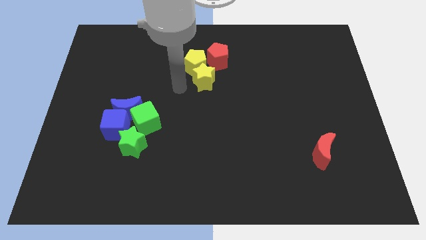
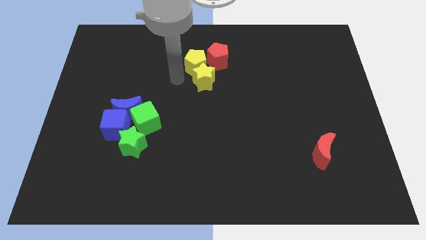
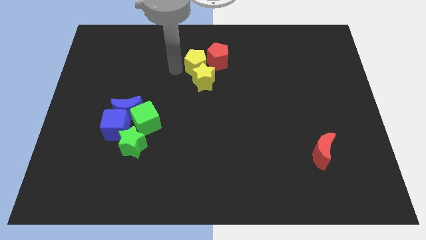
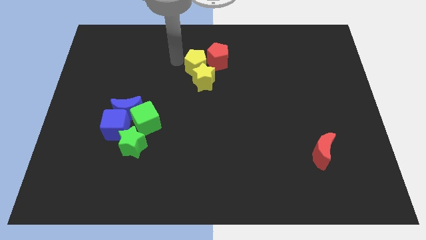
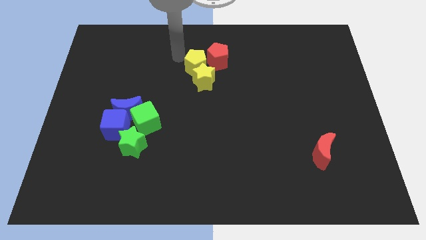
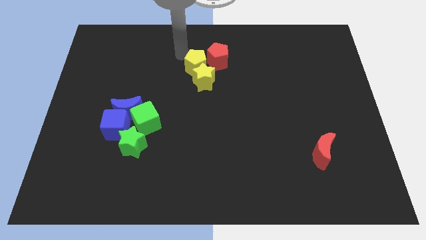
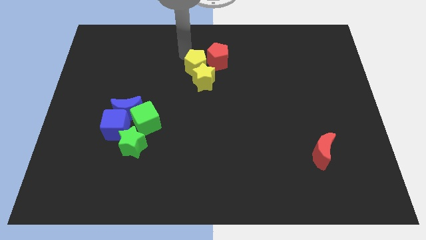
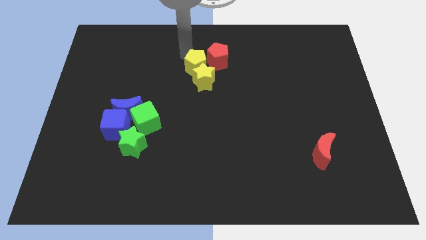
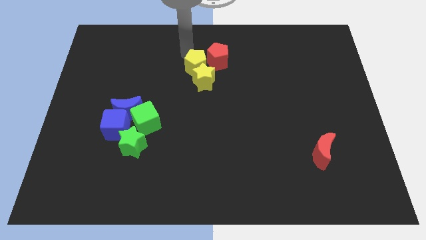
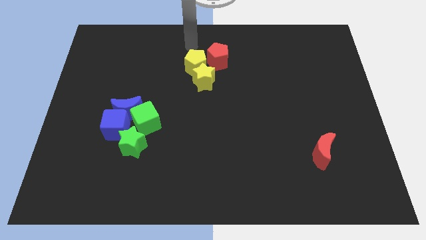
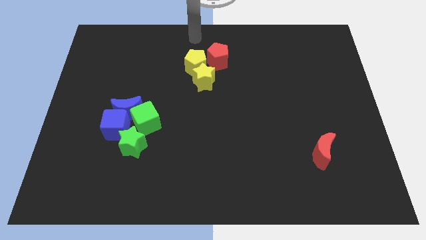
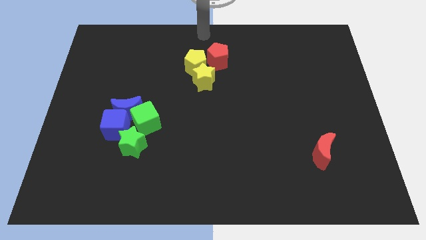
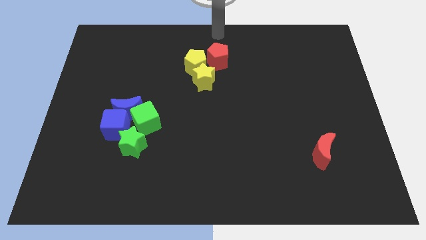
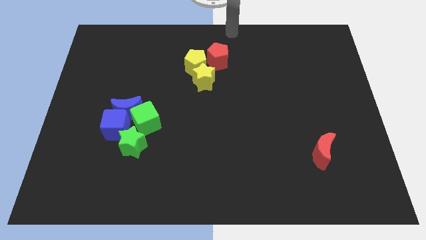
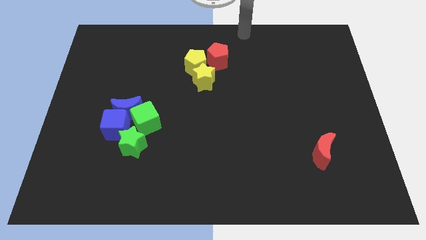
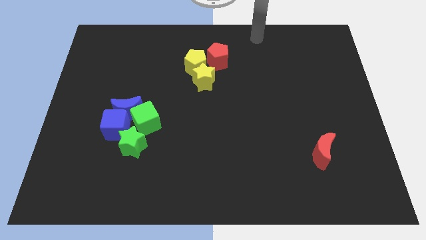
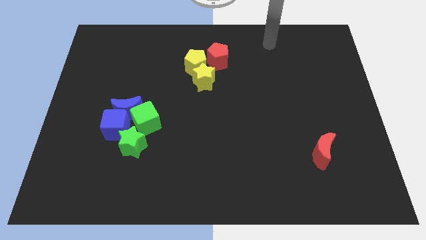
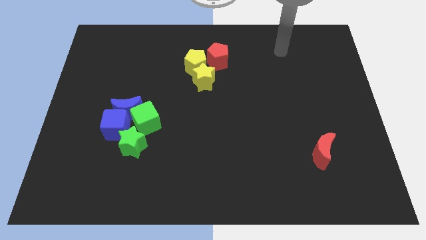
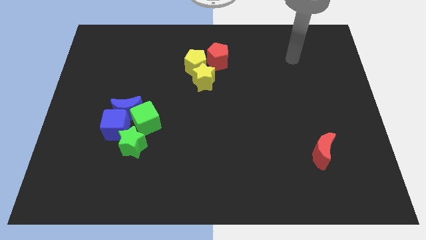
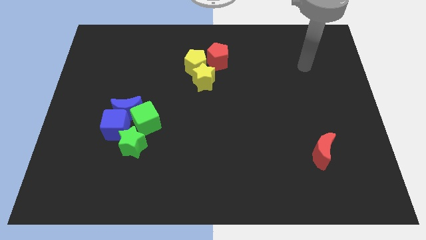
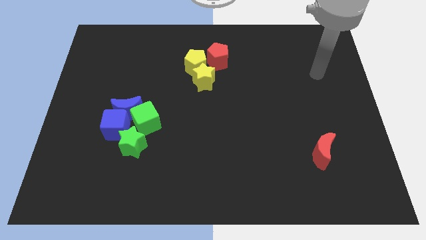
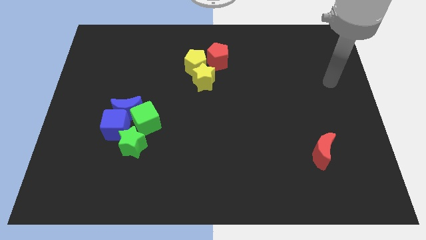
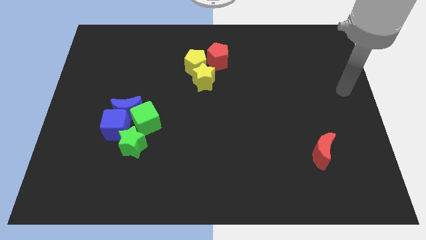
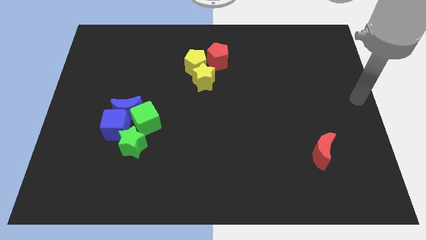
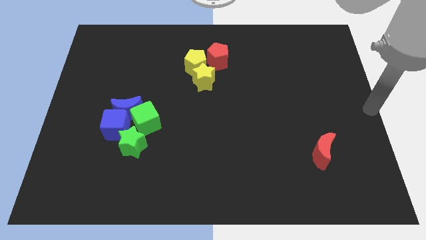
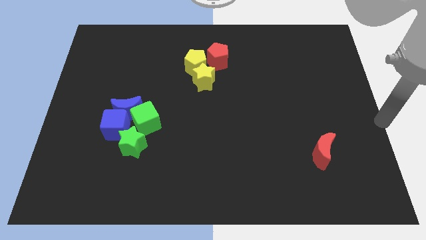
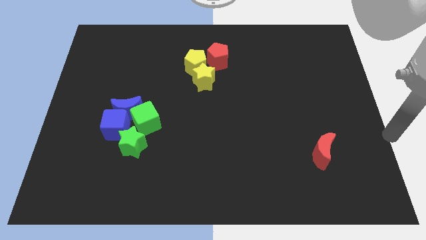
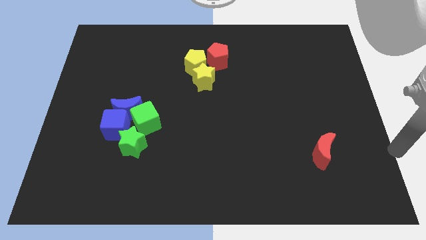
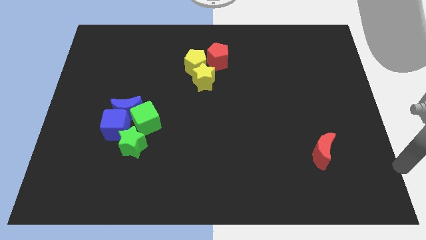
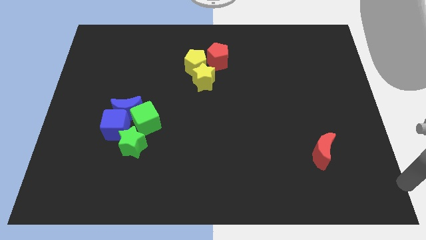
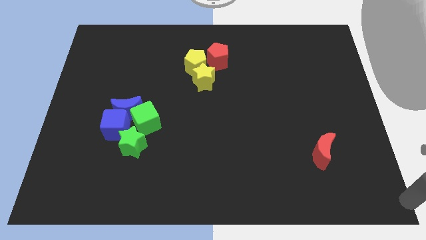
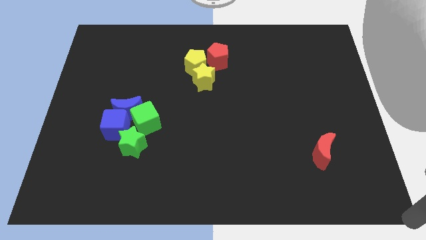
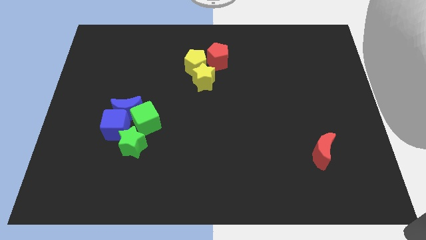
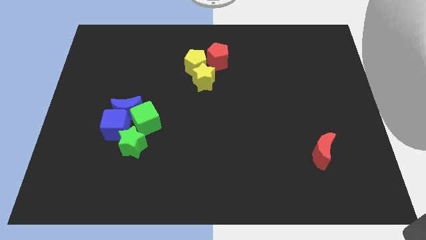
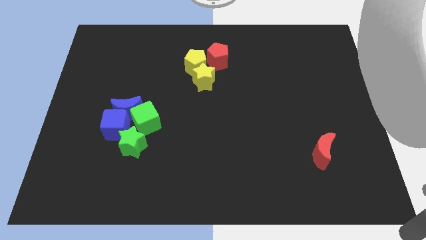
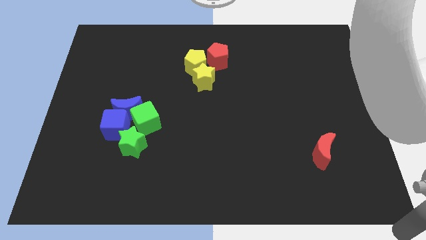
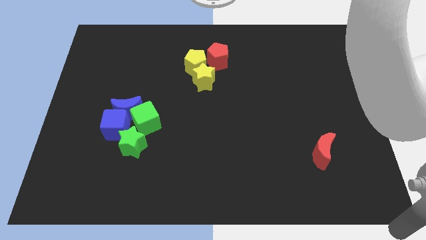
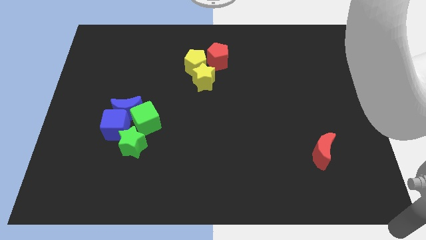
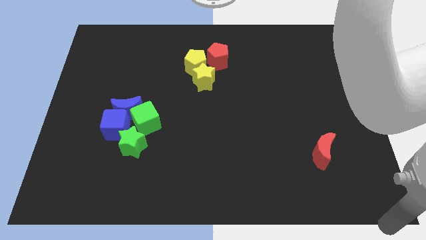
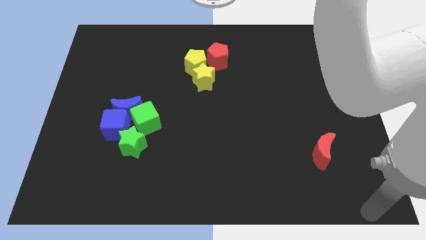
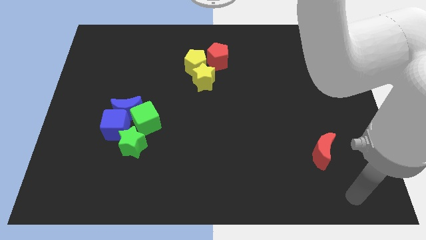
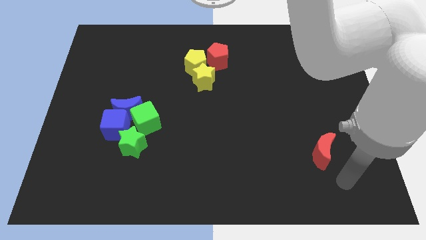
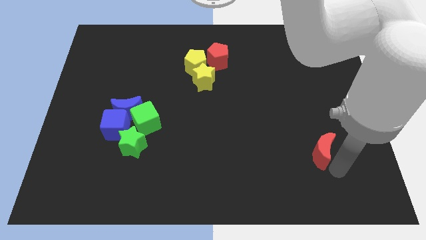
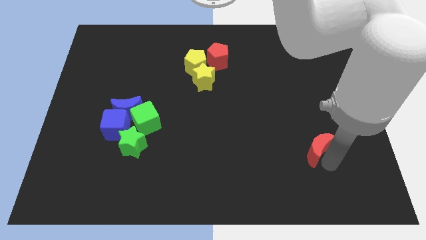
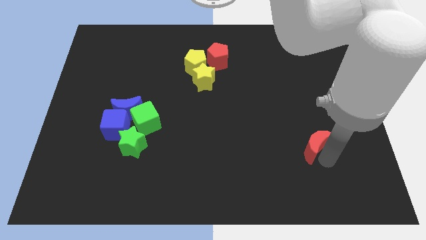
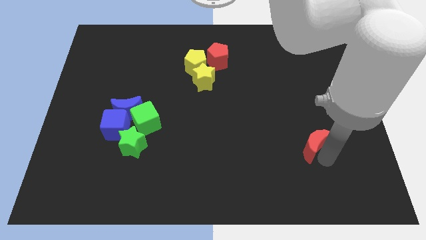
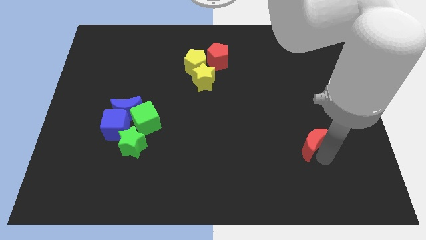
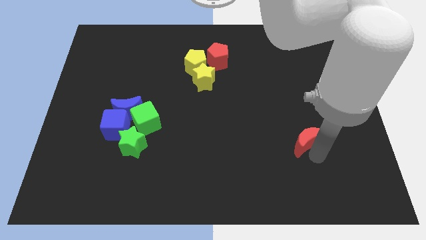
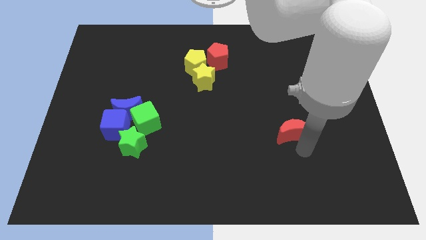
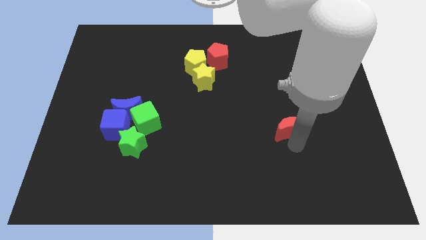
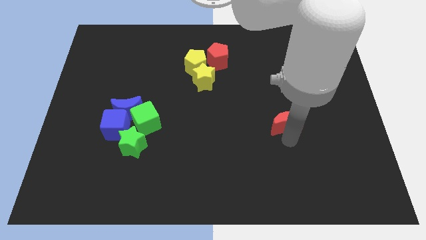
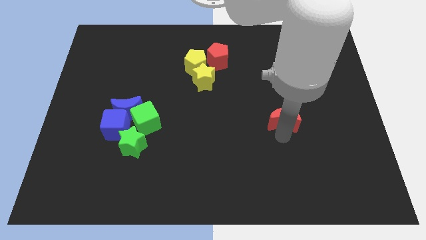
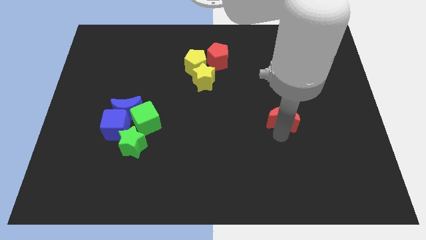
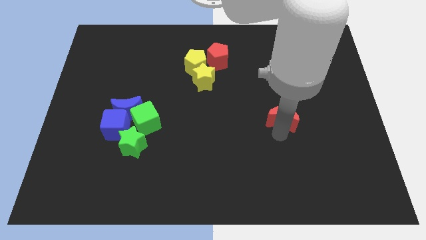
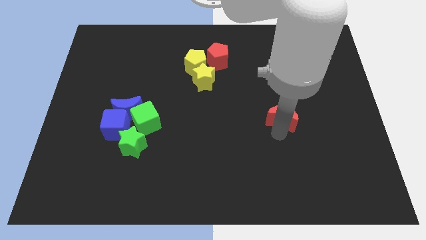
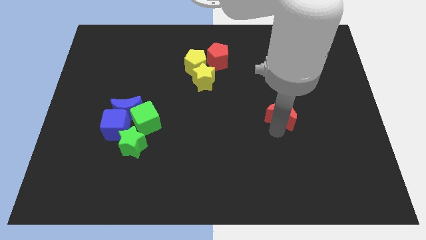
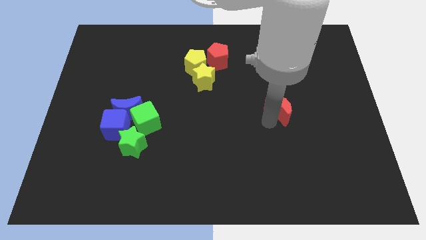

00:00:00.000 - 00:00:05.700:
move the crescent slightly up

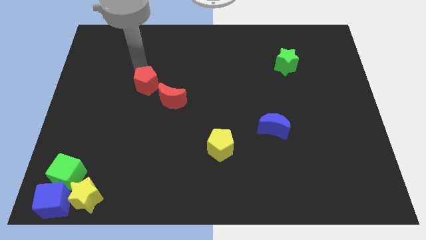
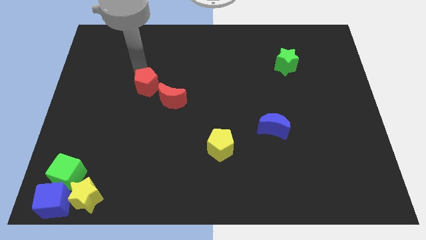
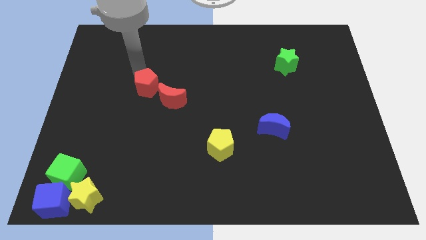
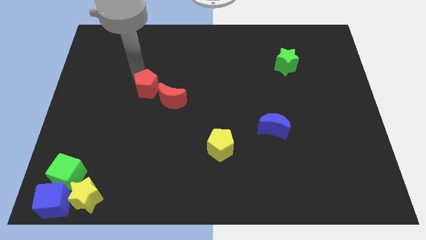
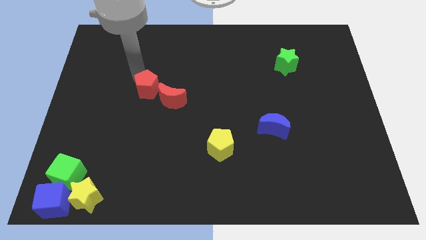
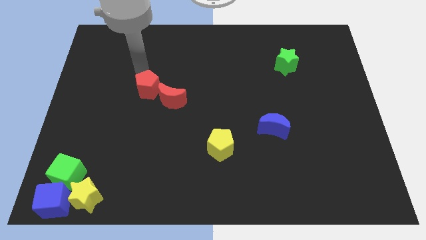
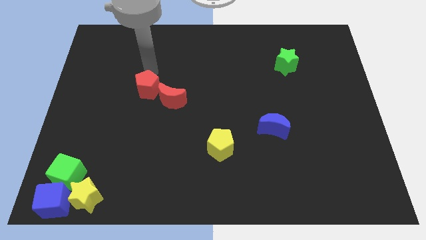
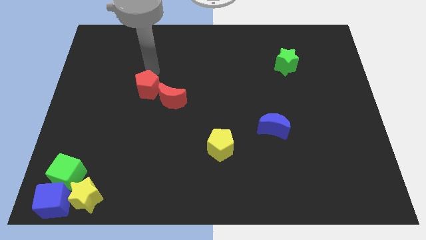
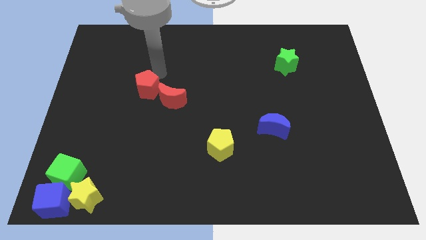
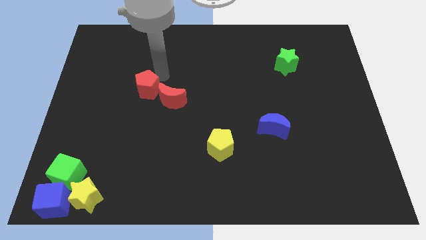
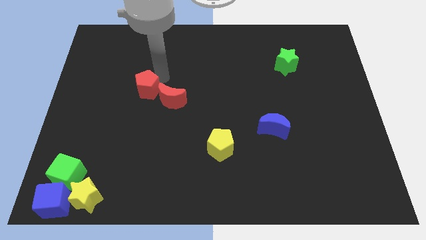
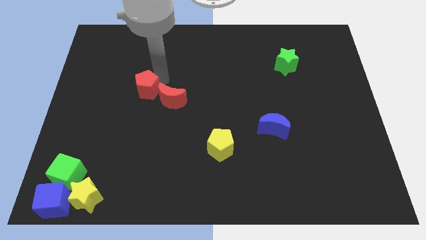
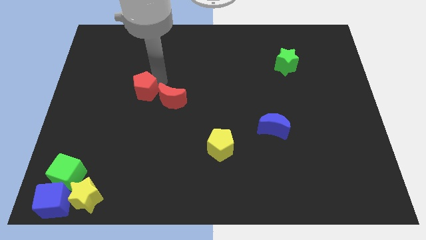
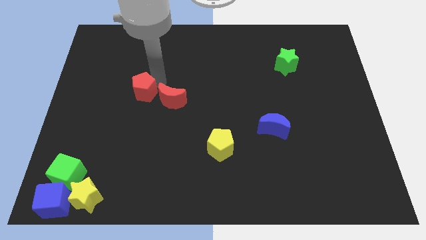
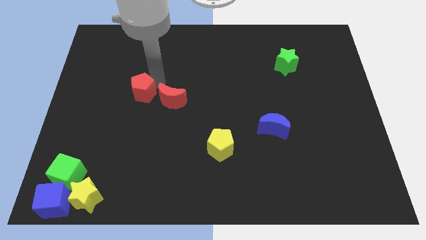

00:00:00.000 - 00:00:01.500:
push the red pentagon to the left of the red crescent

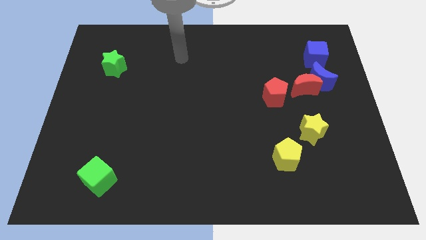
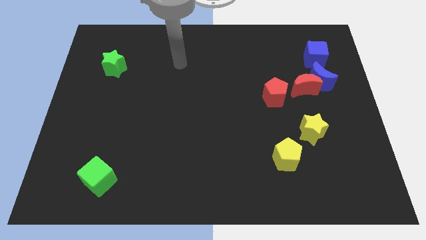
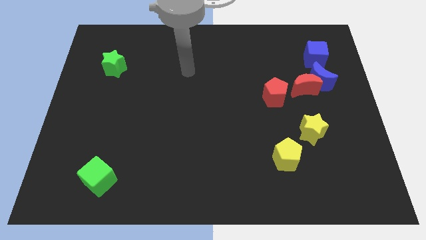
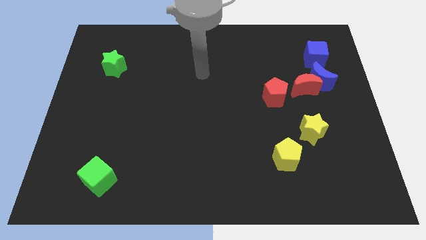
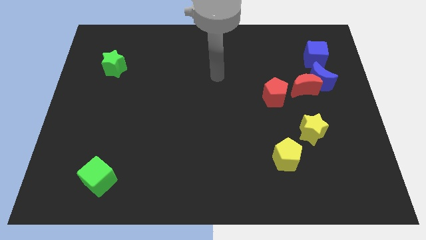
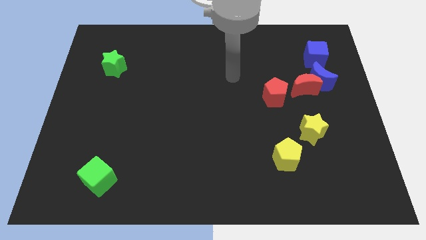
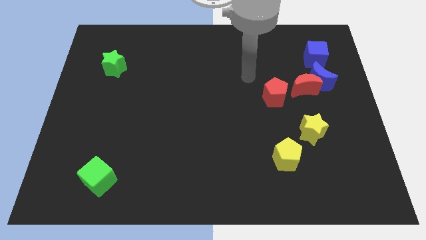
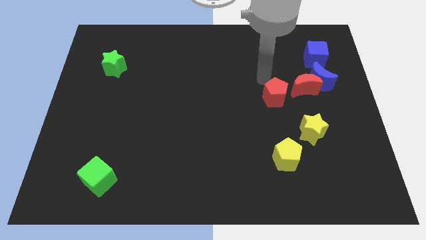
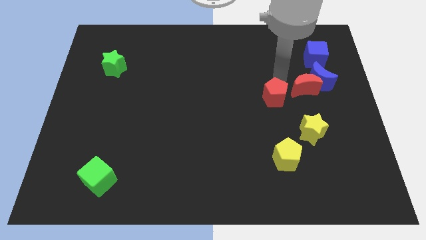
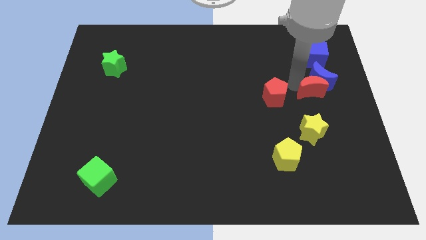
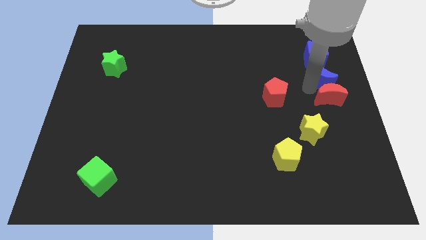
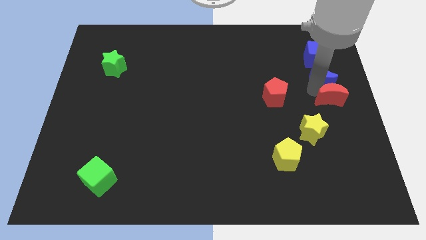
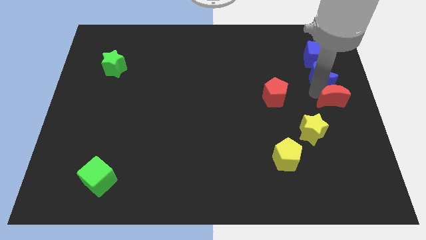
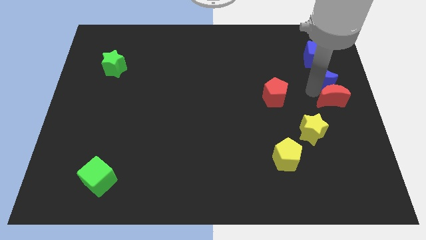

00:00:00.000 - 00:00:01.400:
move the red moon to the bottom of the blue moon

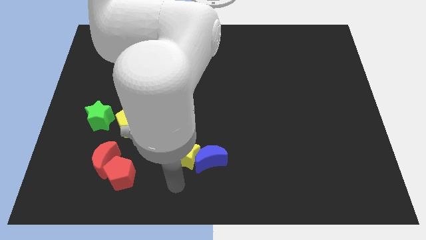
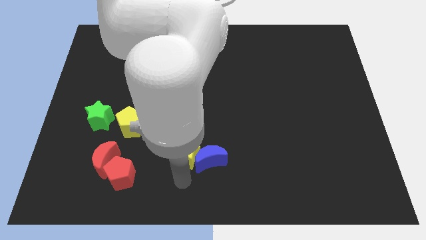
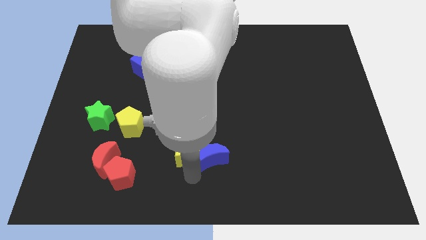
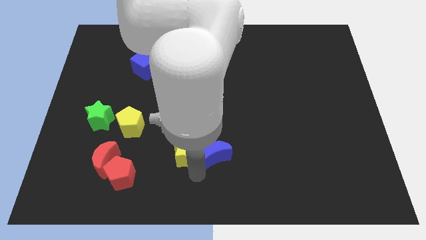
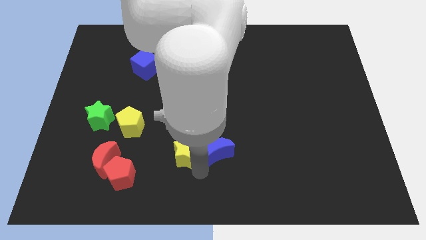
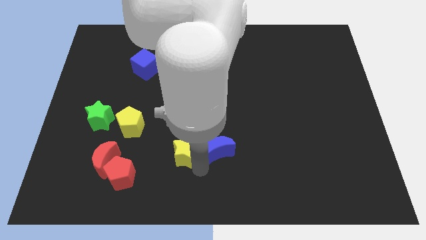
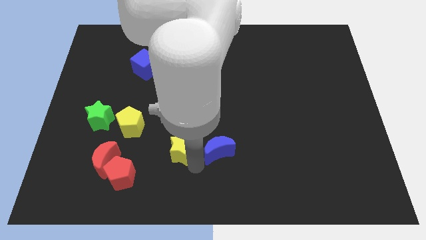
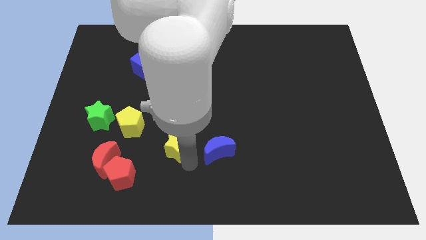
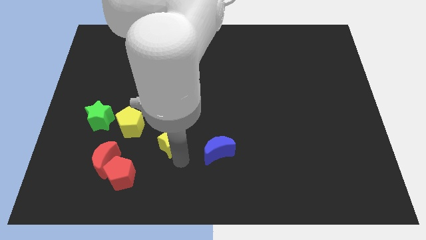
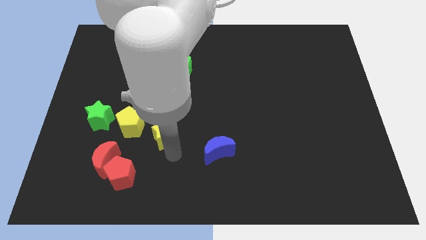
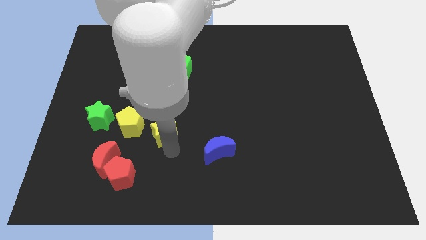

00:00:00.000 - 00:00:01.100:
separate the yellow star from the blue crescent
